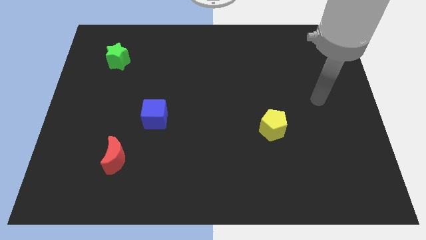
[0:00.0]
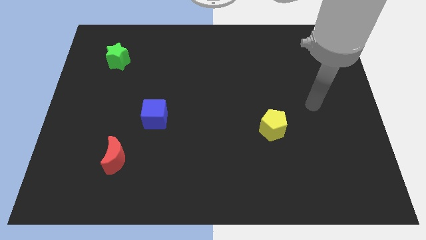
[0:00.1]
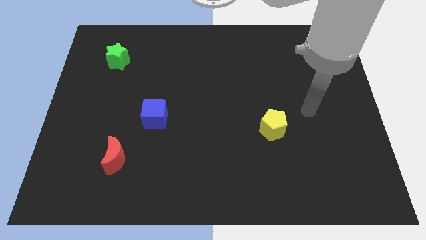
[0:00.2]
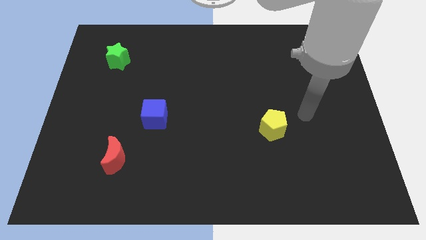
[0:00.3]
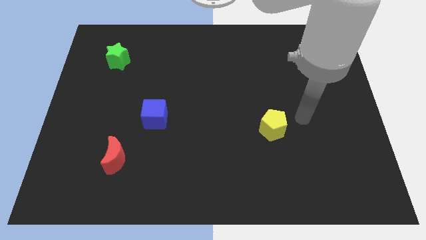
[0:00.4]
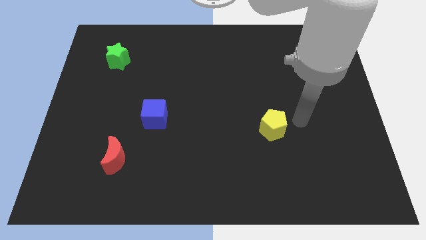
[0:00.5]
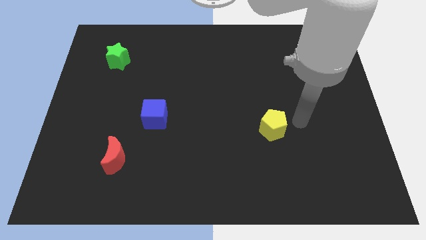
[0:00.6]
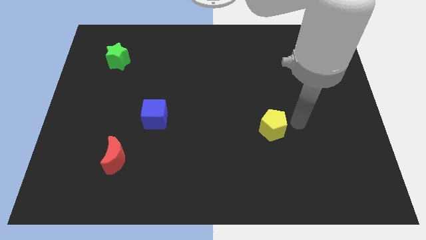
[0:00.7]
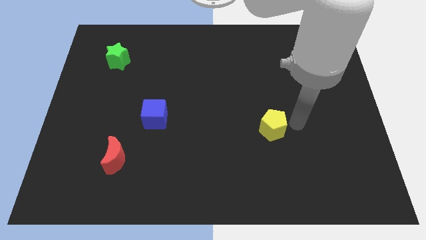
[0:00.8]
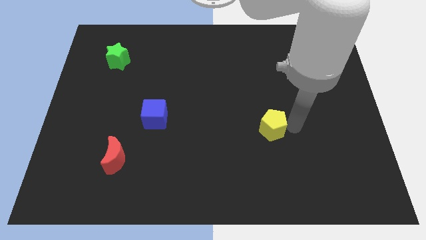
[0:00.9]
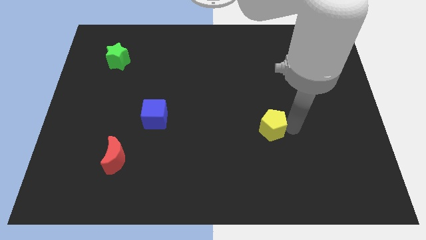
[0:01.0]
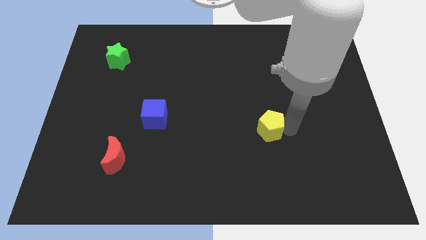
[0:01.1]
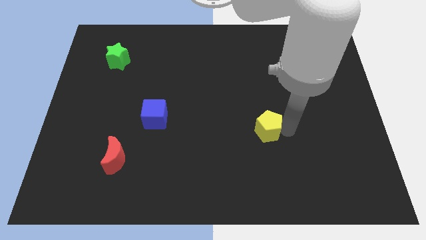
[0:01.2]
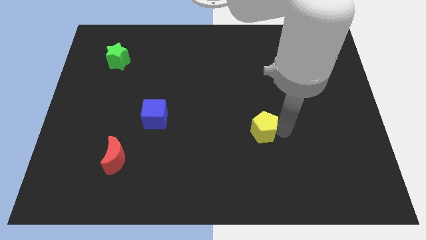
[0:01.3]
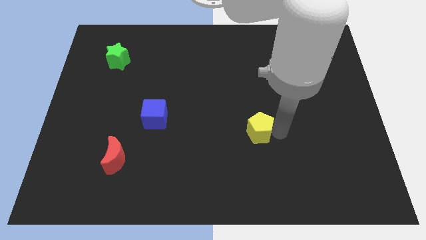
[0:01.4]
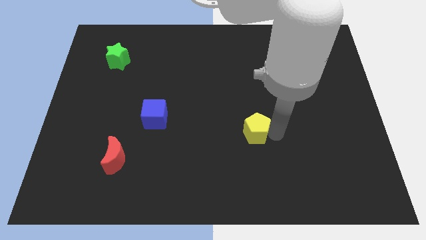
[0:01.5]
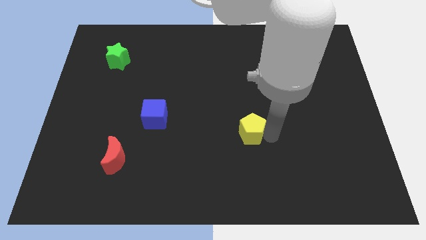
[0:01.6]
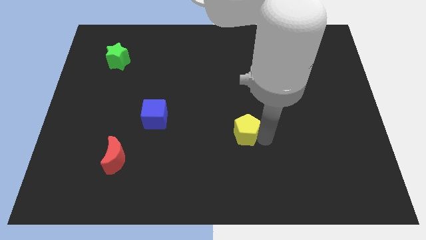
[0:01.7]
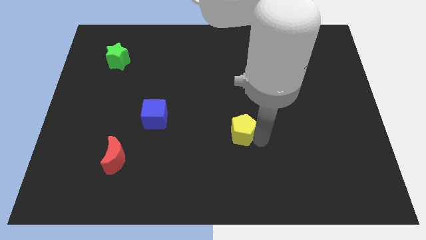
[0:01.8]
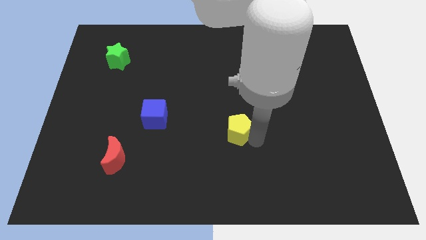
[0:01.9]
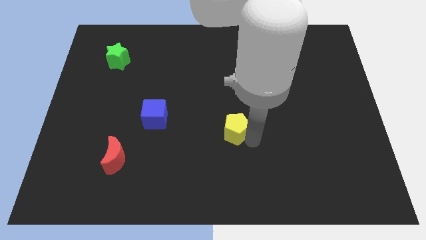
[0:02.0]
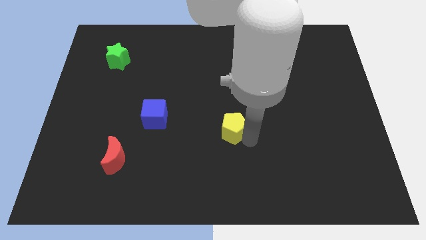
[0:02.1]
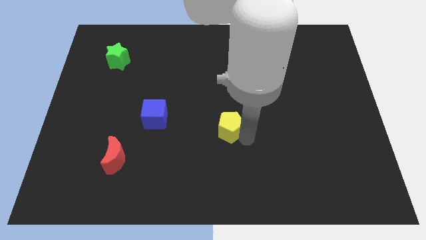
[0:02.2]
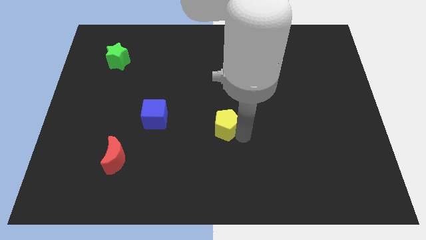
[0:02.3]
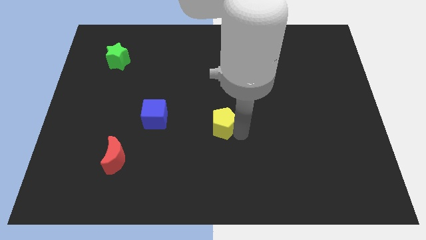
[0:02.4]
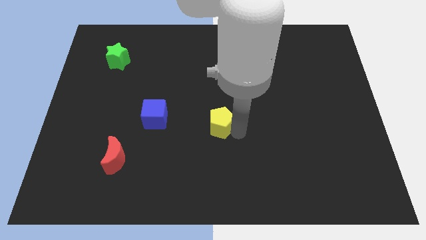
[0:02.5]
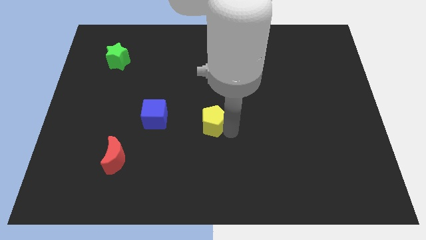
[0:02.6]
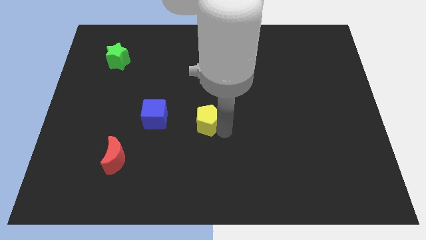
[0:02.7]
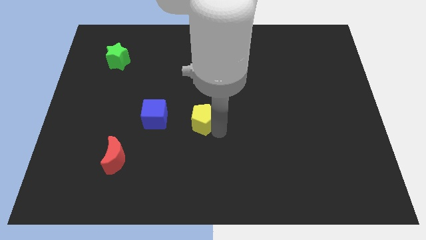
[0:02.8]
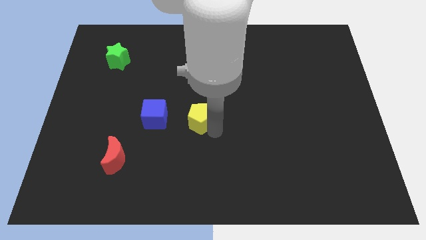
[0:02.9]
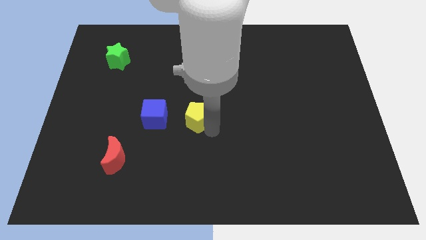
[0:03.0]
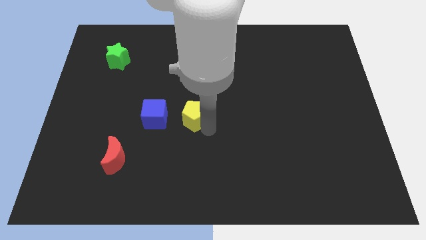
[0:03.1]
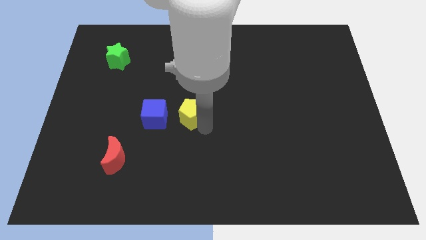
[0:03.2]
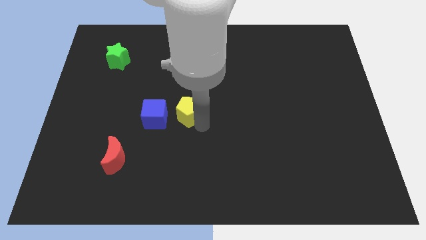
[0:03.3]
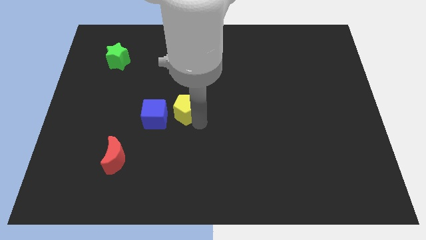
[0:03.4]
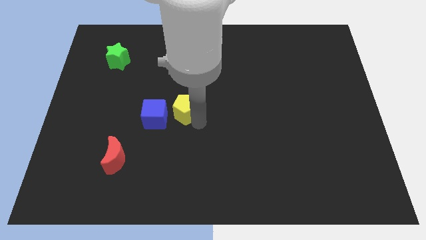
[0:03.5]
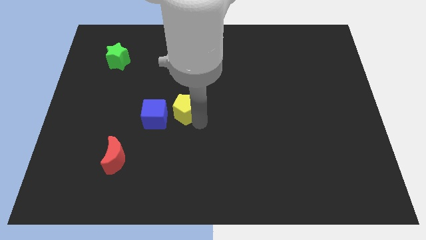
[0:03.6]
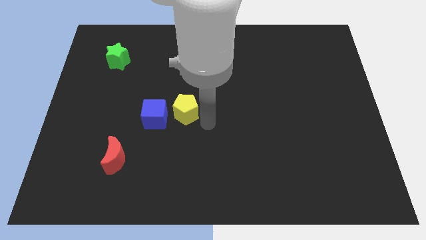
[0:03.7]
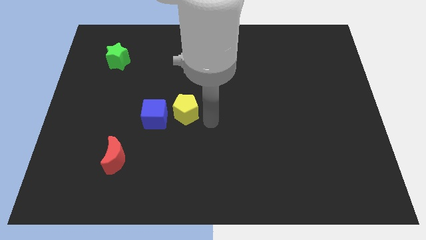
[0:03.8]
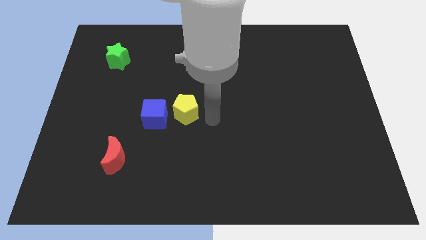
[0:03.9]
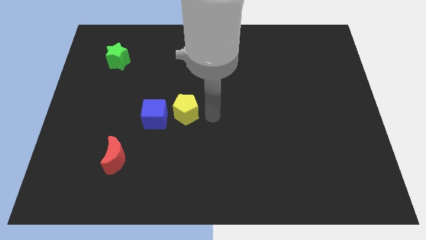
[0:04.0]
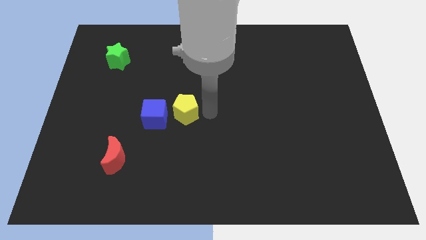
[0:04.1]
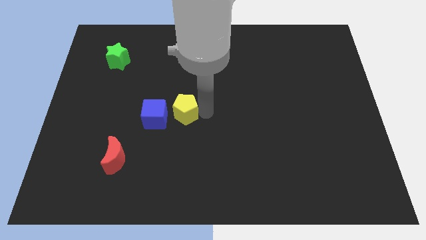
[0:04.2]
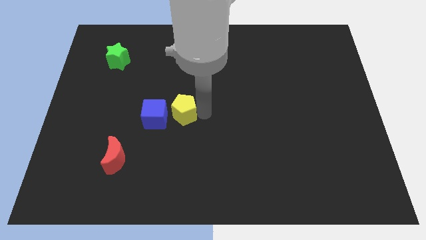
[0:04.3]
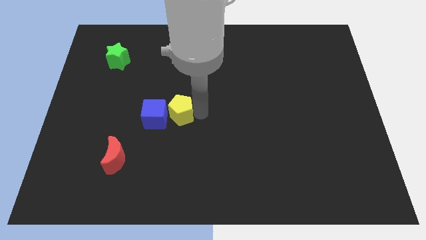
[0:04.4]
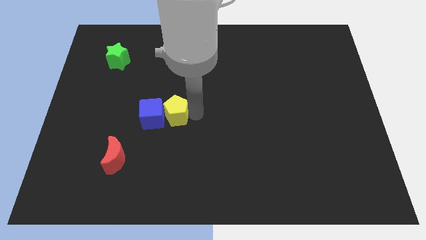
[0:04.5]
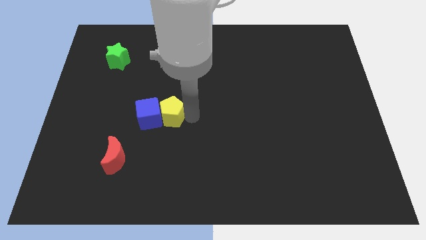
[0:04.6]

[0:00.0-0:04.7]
move the pentagon towards the blue cube

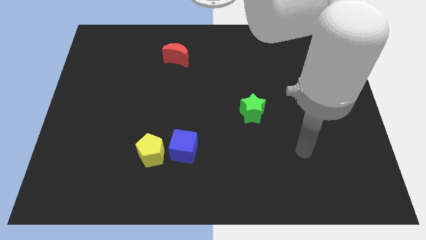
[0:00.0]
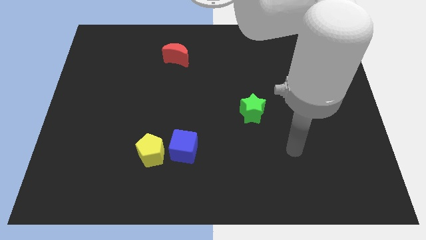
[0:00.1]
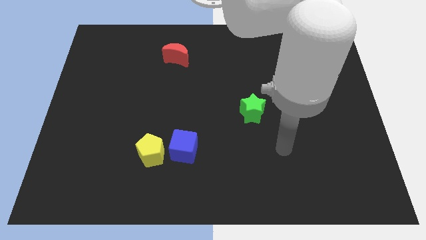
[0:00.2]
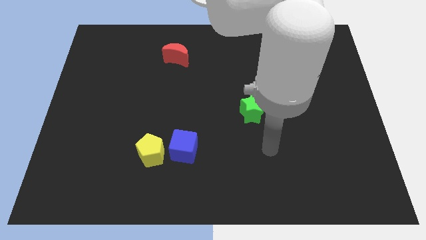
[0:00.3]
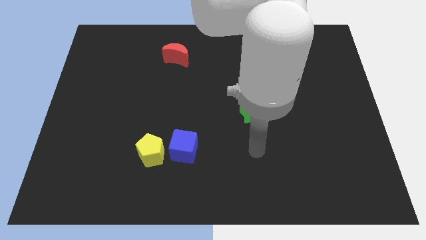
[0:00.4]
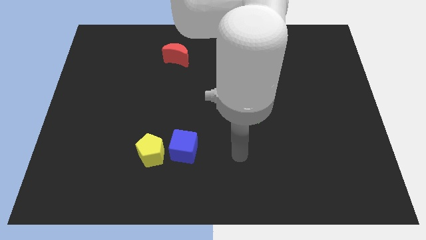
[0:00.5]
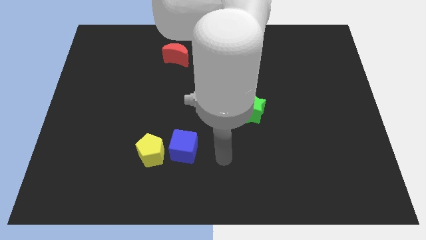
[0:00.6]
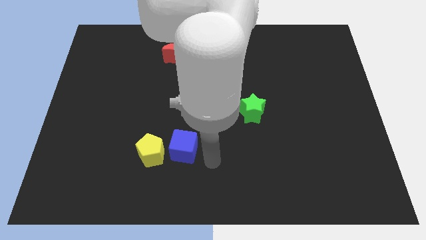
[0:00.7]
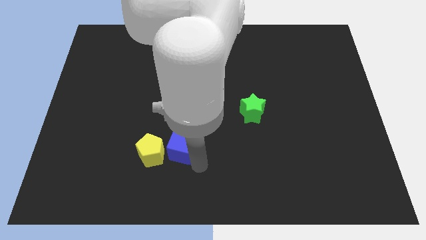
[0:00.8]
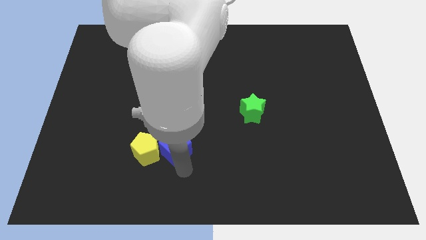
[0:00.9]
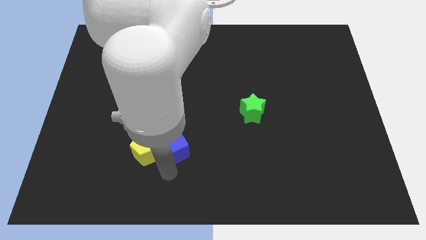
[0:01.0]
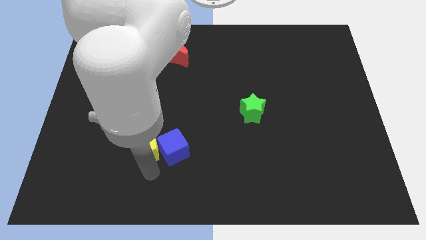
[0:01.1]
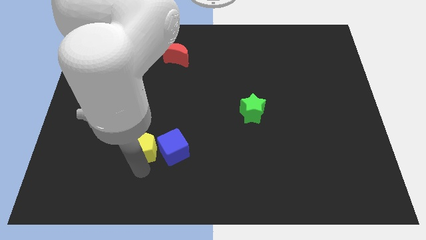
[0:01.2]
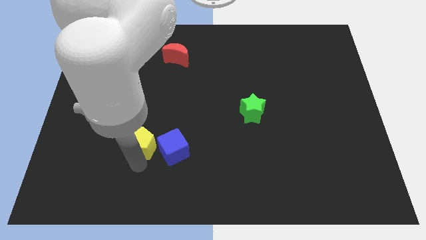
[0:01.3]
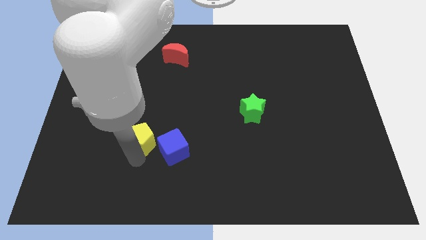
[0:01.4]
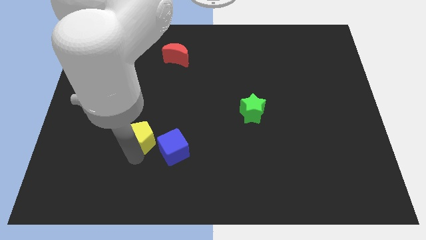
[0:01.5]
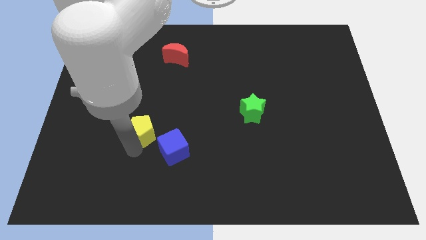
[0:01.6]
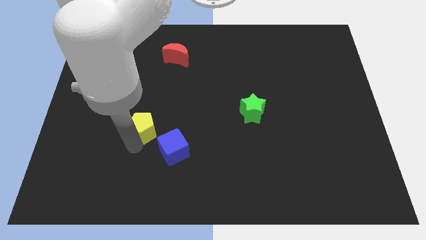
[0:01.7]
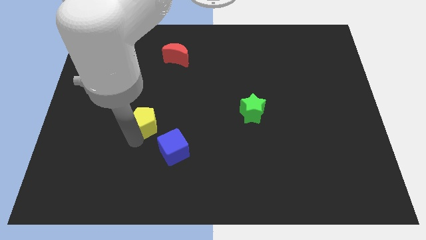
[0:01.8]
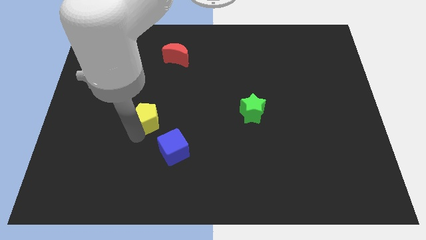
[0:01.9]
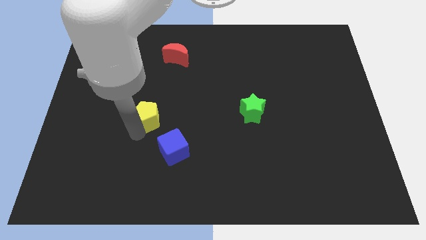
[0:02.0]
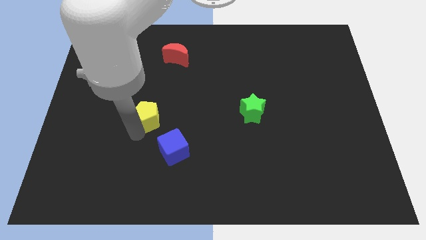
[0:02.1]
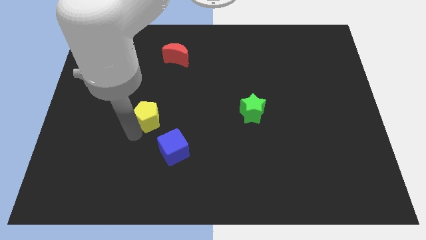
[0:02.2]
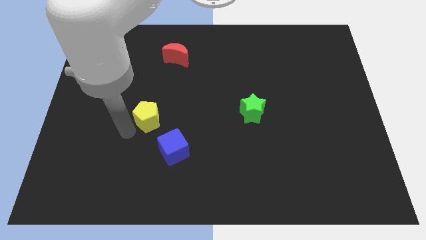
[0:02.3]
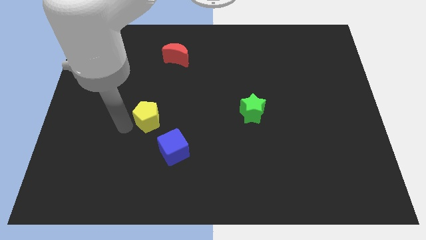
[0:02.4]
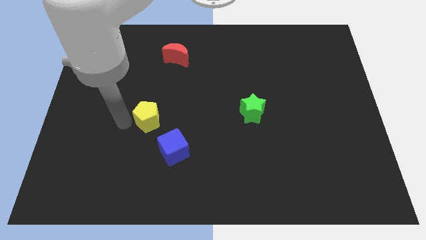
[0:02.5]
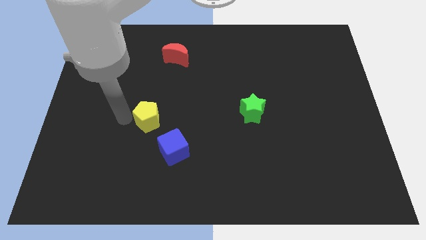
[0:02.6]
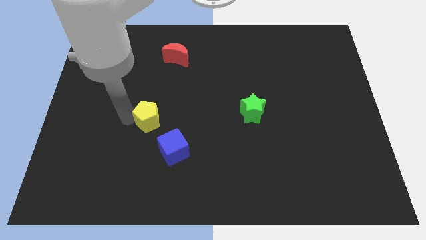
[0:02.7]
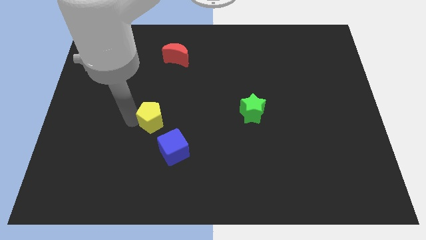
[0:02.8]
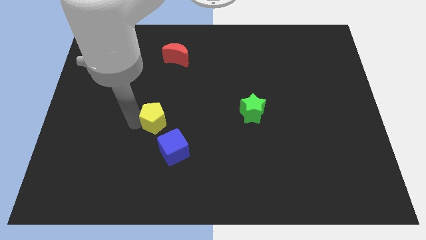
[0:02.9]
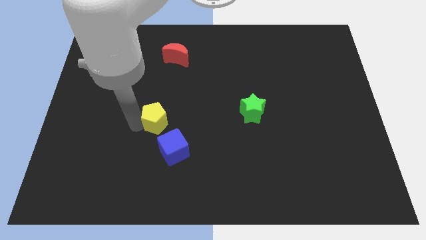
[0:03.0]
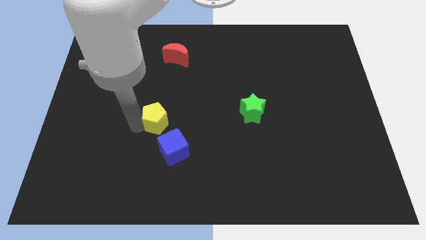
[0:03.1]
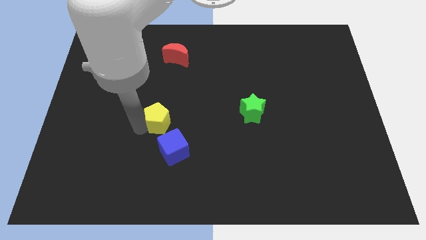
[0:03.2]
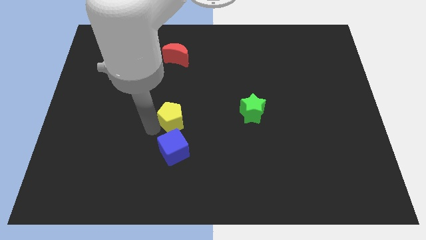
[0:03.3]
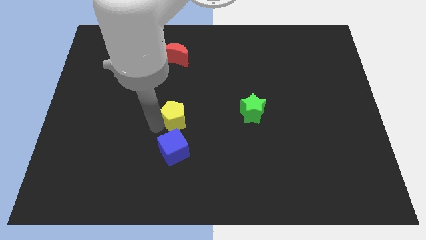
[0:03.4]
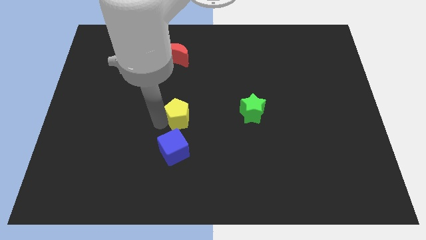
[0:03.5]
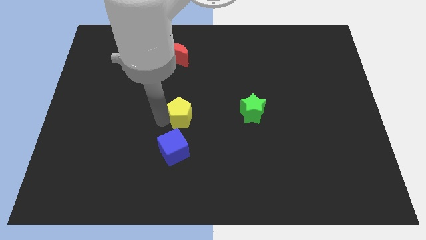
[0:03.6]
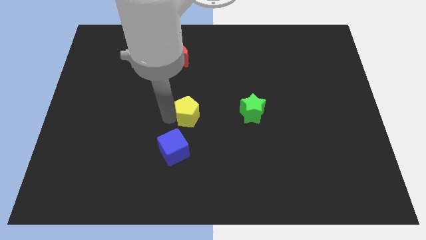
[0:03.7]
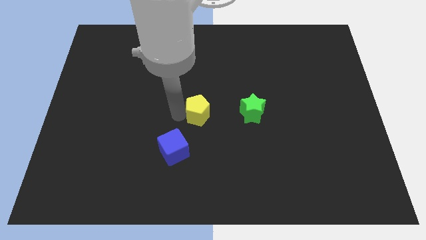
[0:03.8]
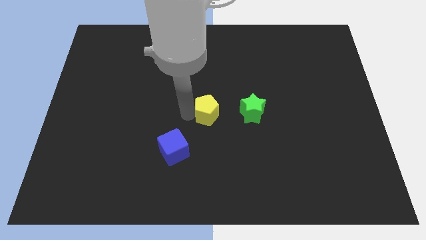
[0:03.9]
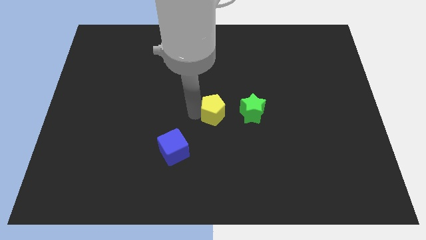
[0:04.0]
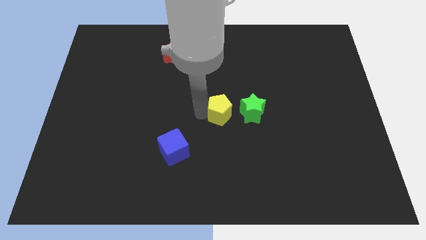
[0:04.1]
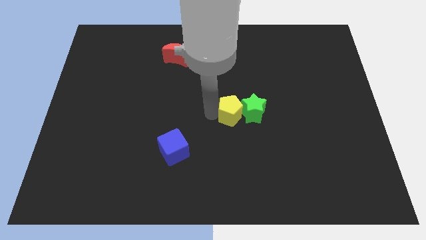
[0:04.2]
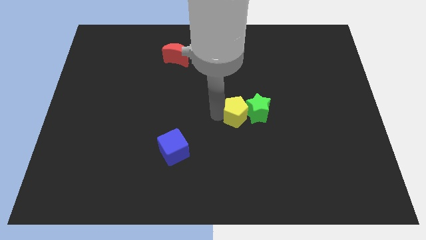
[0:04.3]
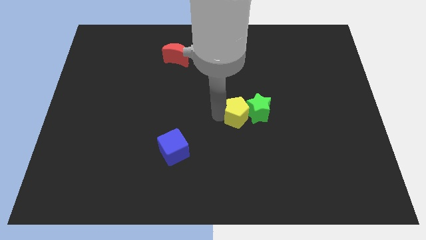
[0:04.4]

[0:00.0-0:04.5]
put the green block close to the yellow pentagon
